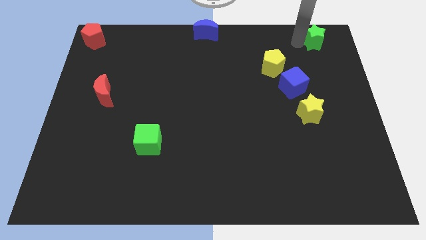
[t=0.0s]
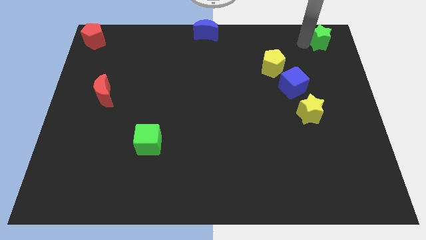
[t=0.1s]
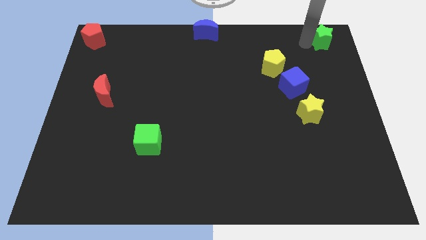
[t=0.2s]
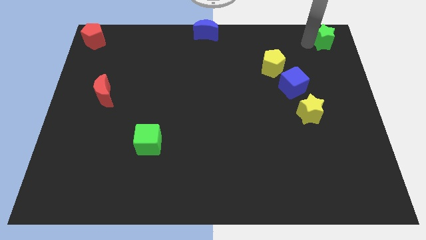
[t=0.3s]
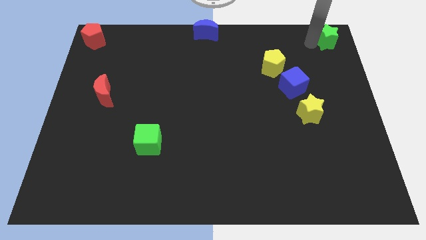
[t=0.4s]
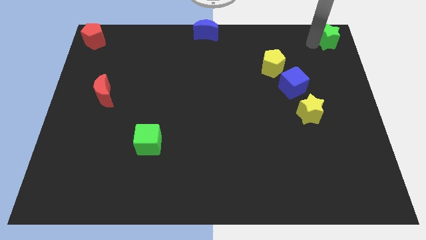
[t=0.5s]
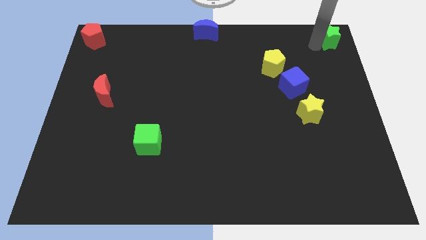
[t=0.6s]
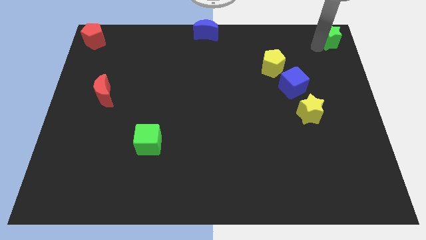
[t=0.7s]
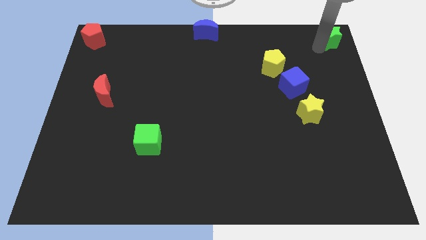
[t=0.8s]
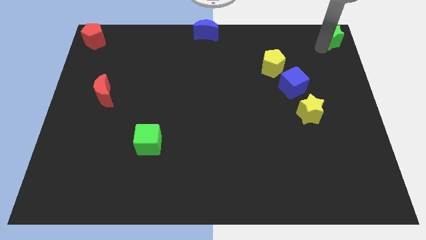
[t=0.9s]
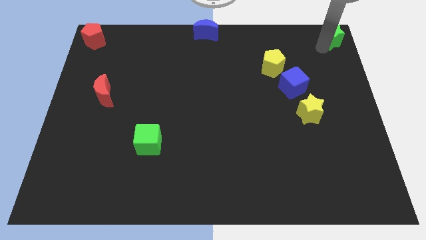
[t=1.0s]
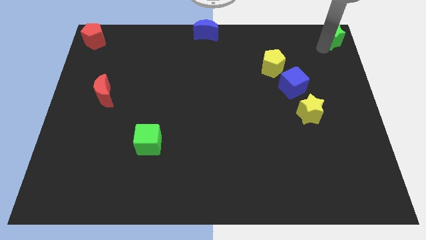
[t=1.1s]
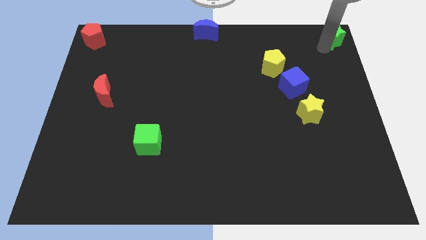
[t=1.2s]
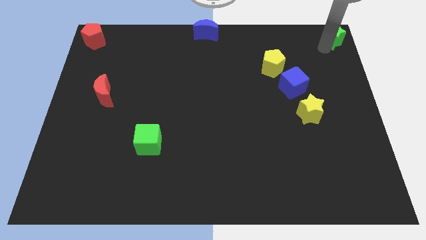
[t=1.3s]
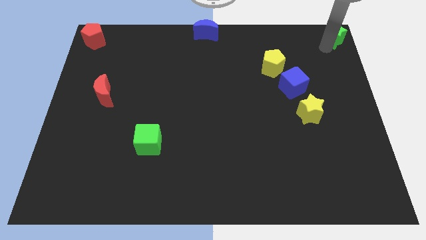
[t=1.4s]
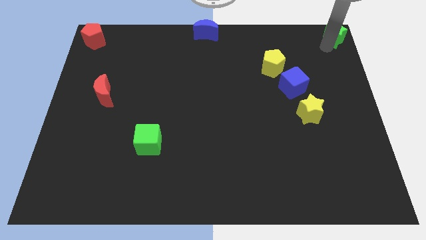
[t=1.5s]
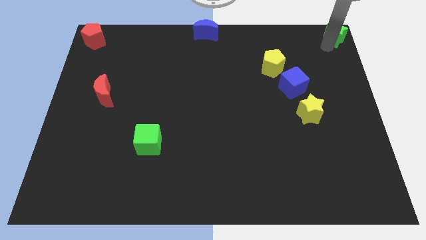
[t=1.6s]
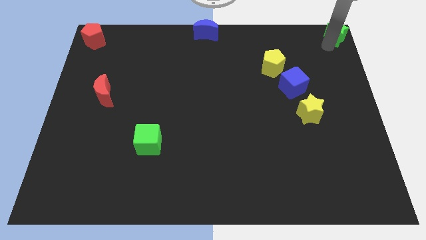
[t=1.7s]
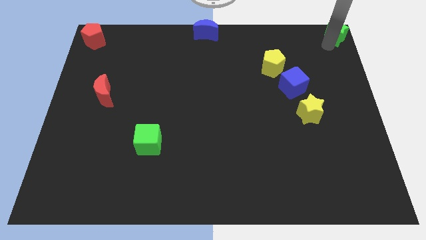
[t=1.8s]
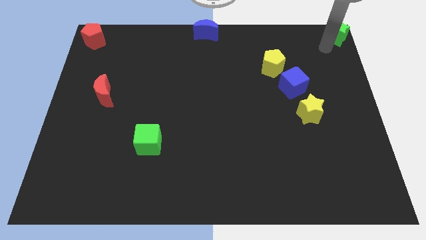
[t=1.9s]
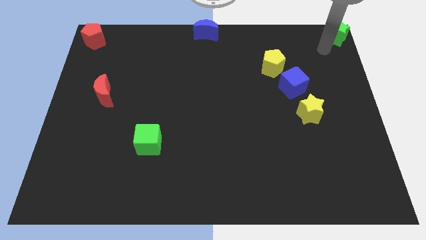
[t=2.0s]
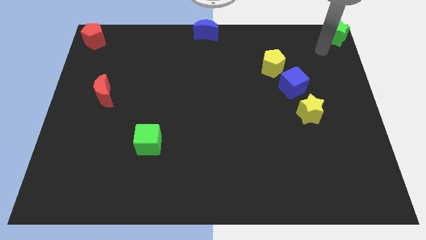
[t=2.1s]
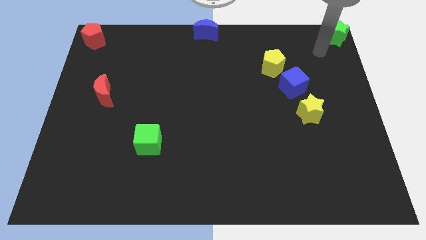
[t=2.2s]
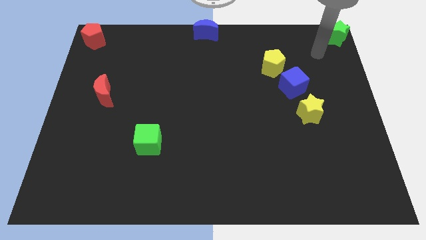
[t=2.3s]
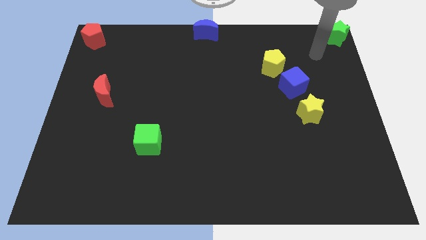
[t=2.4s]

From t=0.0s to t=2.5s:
push the green star towards the top right corner of the board

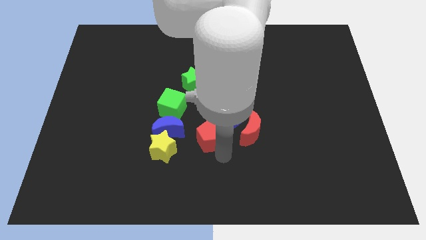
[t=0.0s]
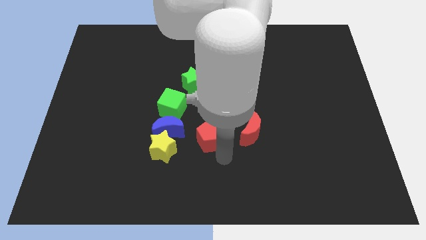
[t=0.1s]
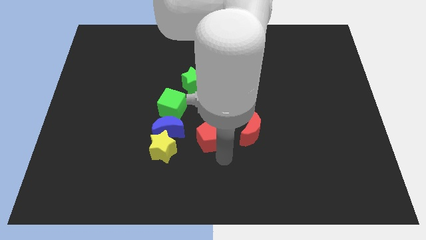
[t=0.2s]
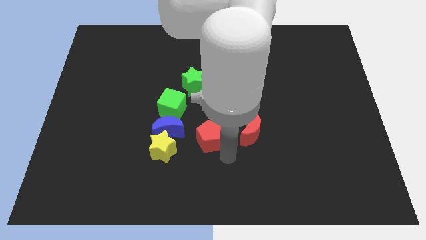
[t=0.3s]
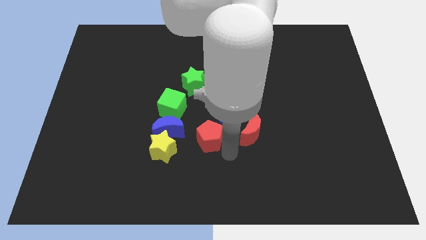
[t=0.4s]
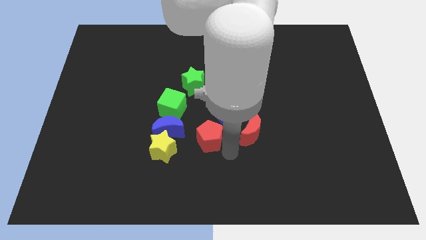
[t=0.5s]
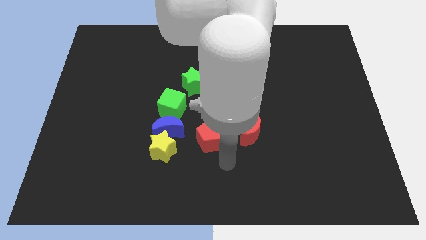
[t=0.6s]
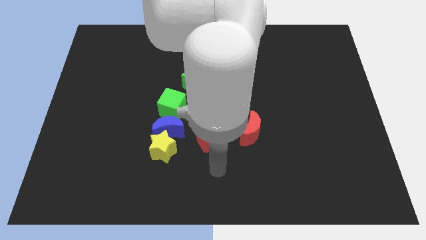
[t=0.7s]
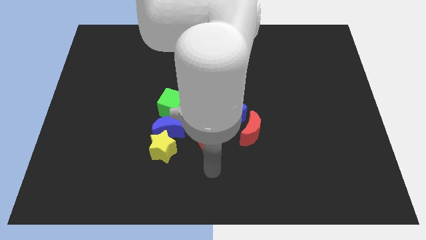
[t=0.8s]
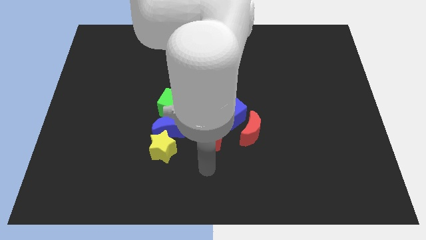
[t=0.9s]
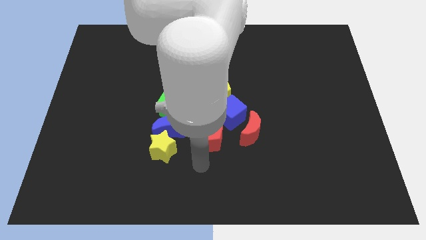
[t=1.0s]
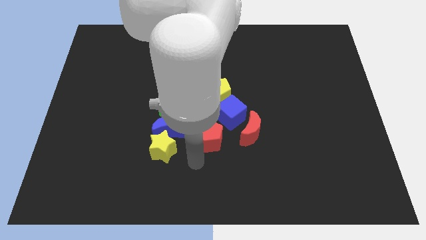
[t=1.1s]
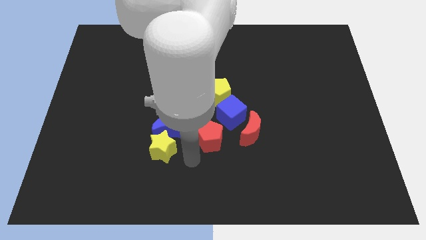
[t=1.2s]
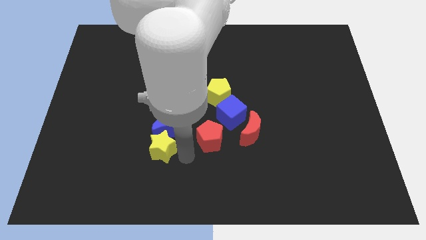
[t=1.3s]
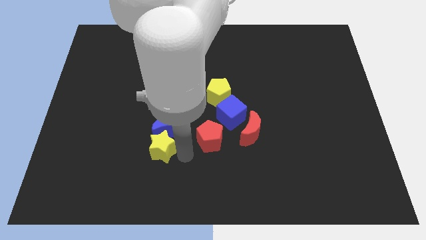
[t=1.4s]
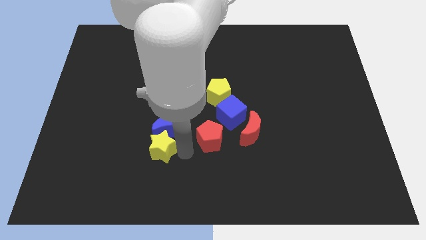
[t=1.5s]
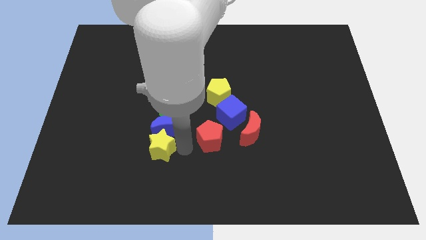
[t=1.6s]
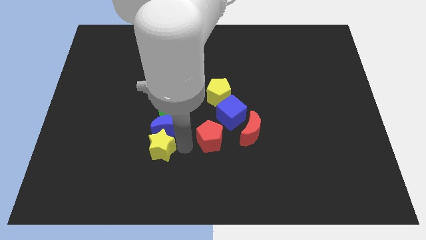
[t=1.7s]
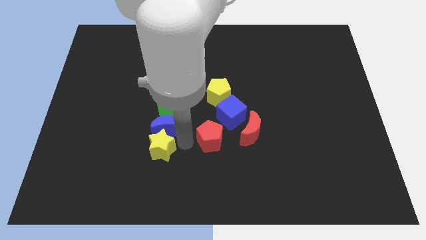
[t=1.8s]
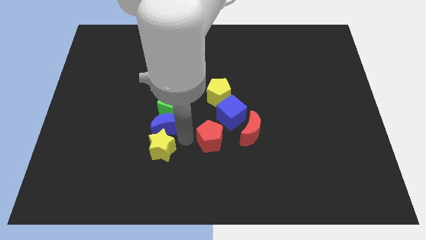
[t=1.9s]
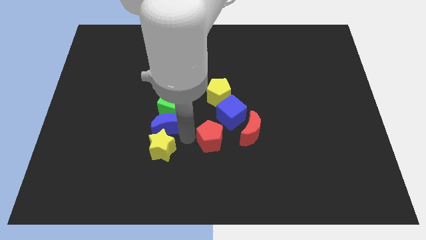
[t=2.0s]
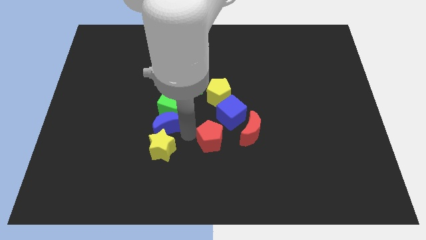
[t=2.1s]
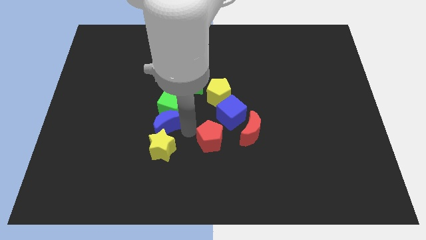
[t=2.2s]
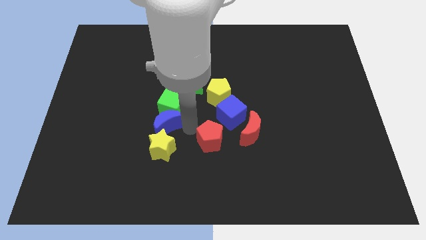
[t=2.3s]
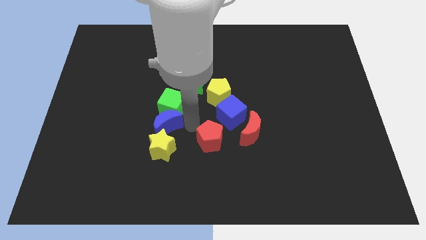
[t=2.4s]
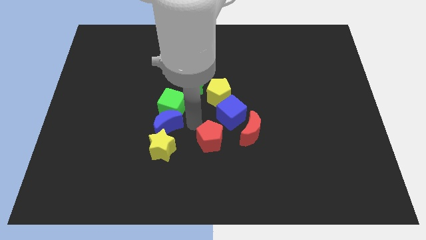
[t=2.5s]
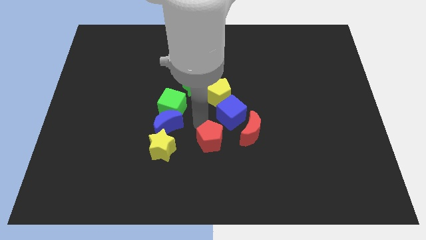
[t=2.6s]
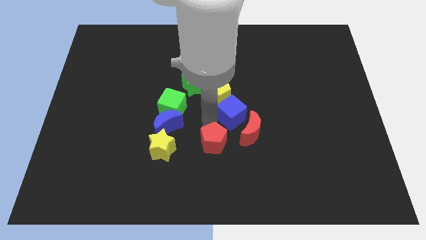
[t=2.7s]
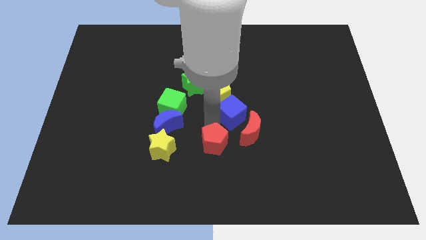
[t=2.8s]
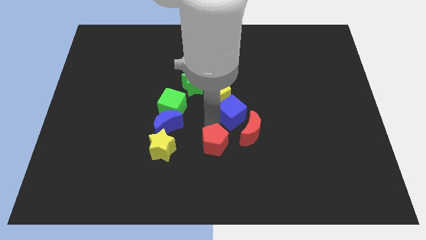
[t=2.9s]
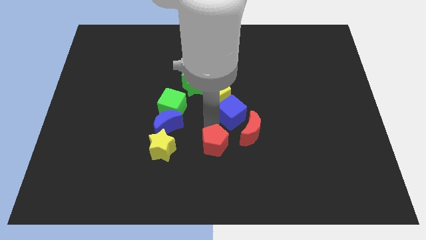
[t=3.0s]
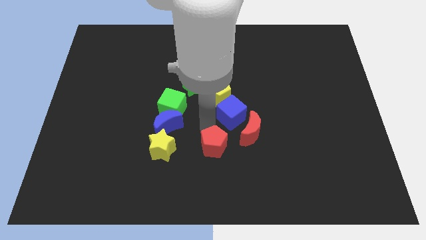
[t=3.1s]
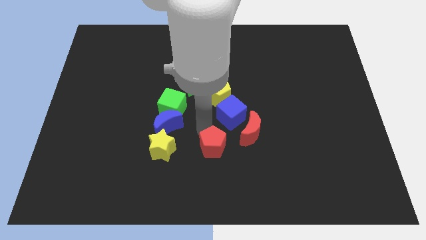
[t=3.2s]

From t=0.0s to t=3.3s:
push the red pentagon slightly to the bottom

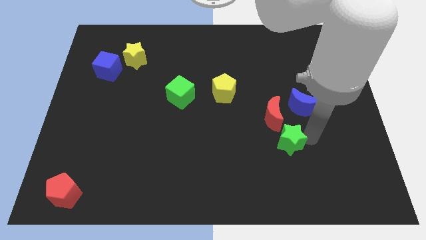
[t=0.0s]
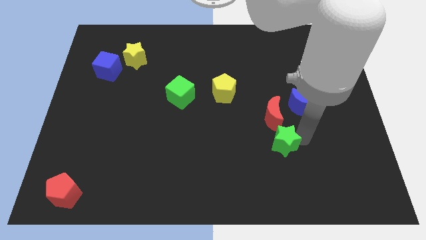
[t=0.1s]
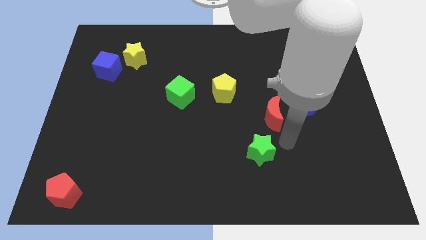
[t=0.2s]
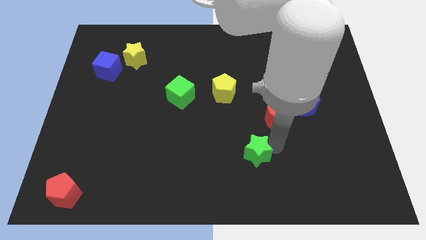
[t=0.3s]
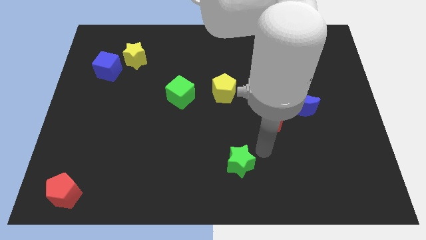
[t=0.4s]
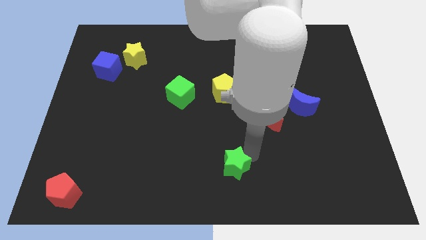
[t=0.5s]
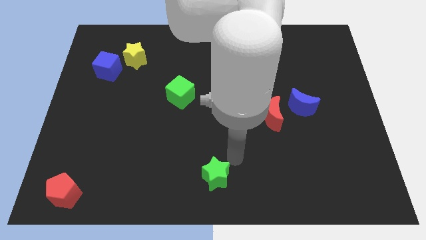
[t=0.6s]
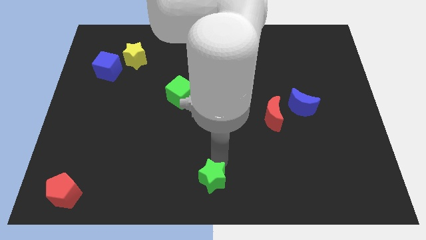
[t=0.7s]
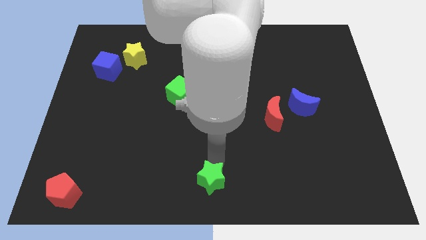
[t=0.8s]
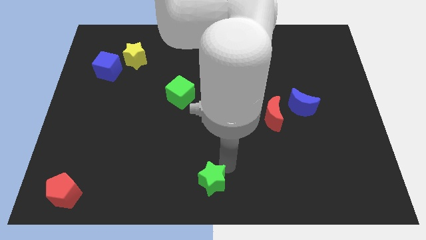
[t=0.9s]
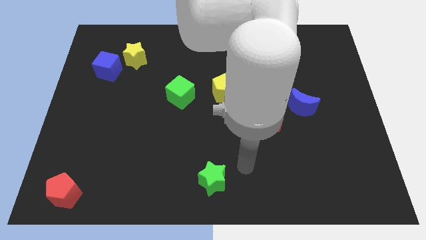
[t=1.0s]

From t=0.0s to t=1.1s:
take the green star towards the bottom center of the board

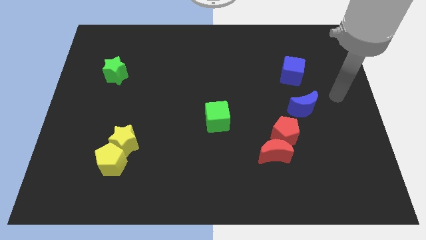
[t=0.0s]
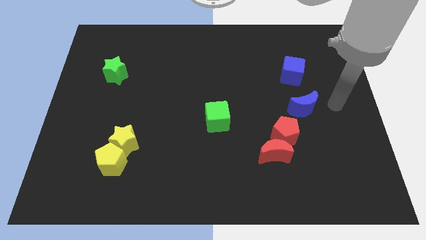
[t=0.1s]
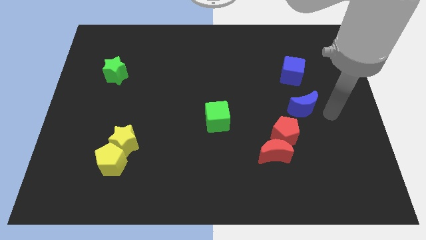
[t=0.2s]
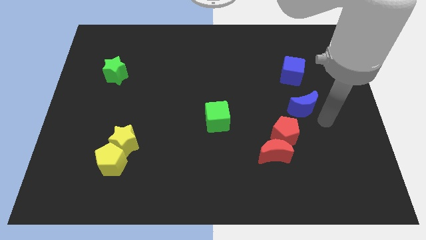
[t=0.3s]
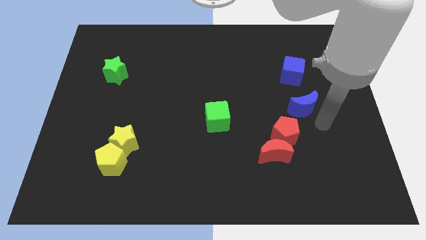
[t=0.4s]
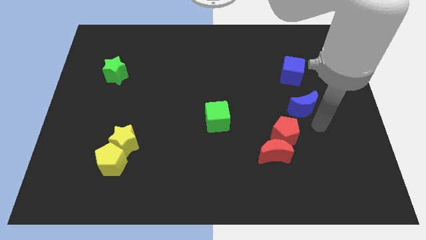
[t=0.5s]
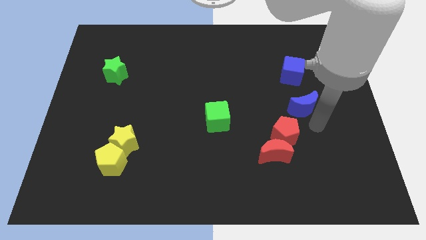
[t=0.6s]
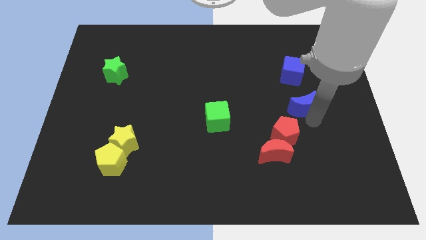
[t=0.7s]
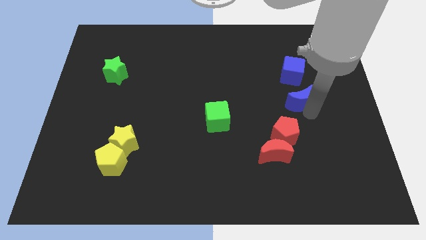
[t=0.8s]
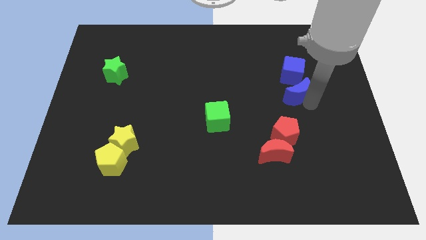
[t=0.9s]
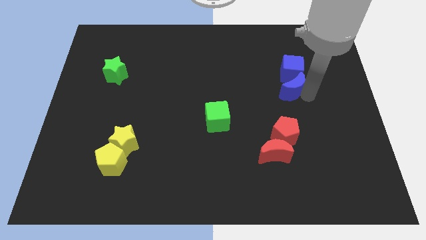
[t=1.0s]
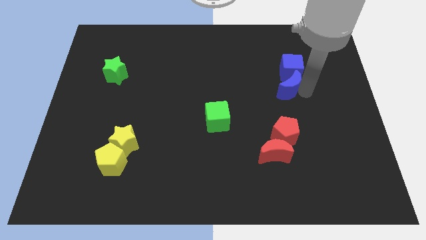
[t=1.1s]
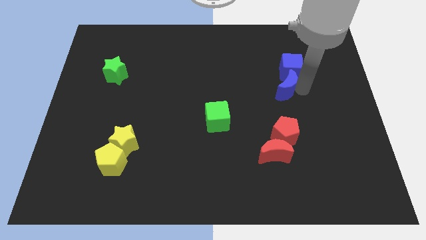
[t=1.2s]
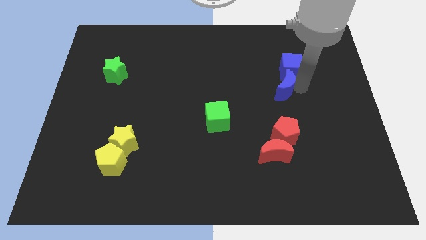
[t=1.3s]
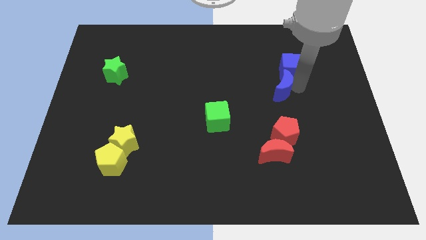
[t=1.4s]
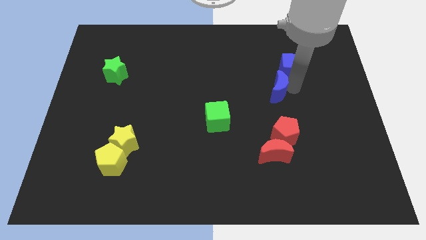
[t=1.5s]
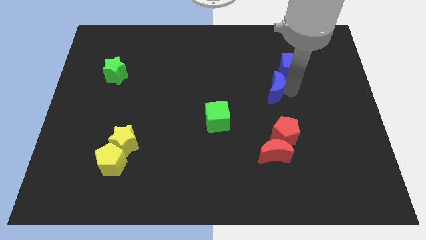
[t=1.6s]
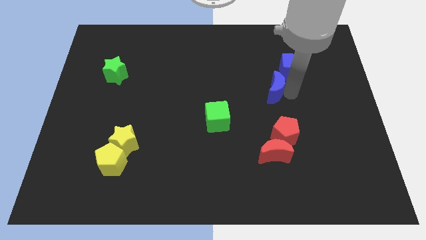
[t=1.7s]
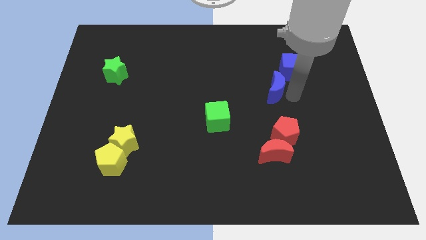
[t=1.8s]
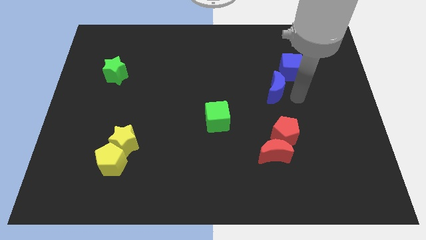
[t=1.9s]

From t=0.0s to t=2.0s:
slide the blue crescent towards blue cube
